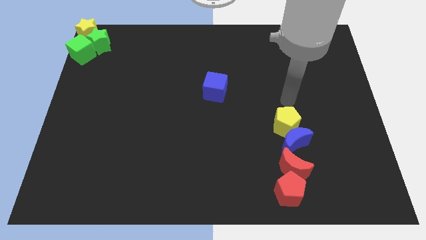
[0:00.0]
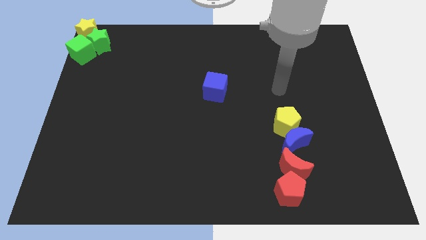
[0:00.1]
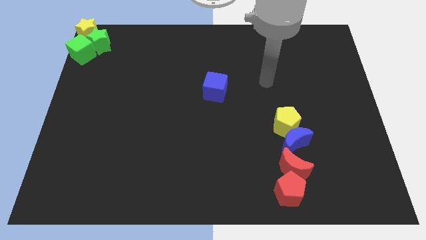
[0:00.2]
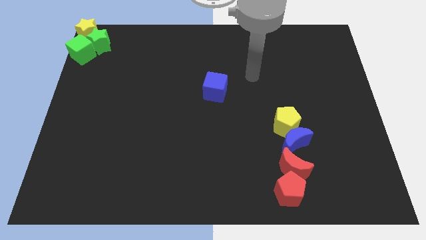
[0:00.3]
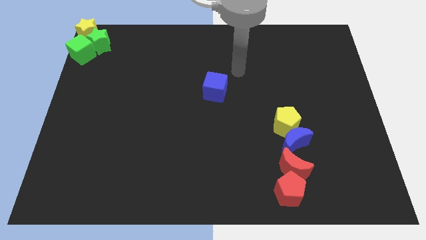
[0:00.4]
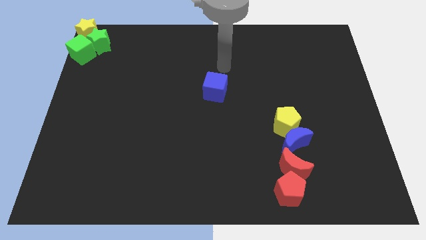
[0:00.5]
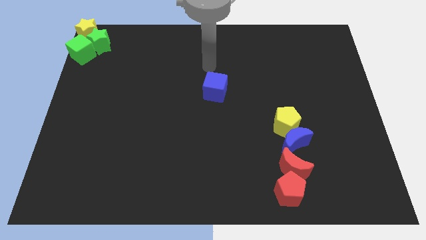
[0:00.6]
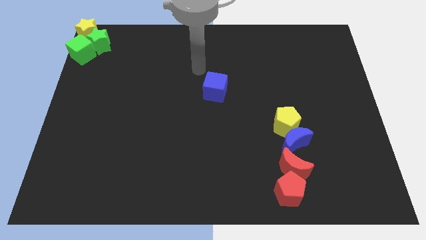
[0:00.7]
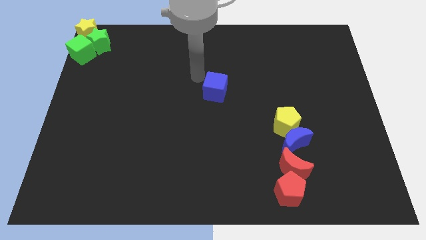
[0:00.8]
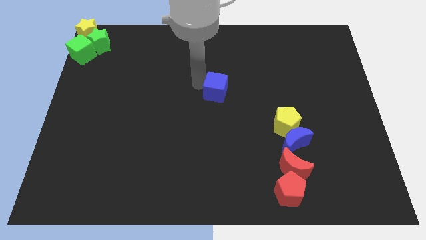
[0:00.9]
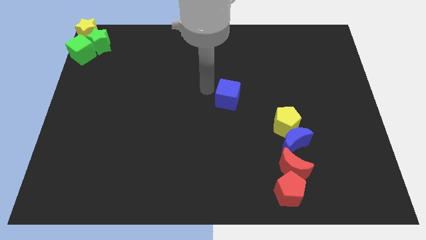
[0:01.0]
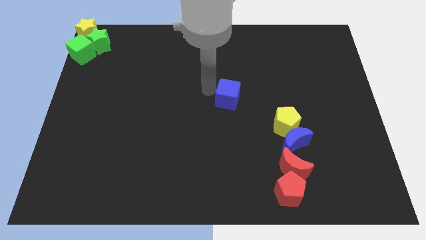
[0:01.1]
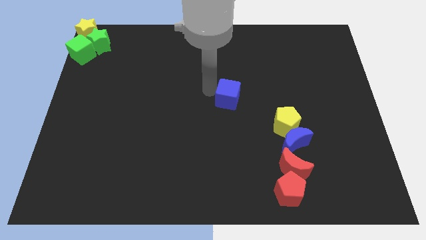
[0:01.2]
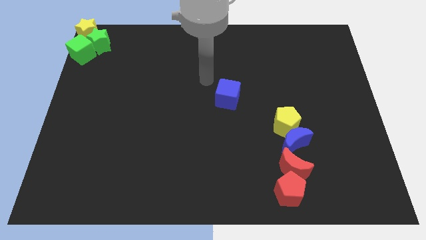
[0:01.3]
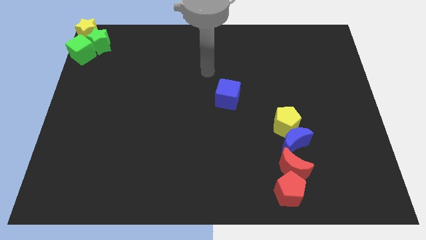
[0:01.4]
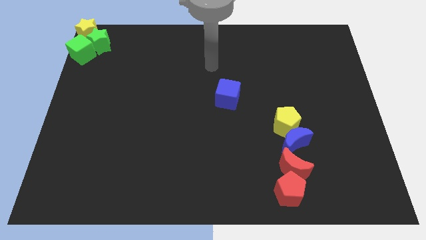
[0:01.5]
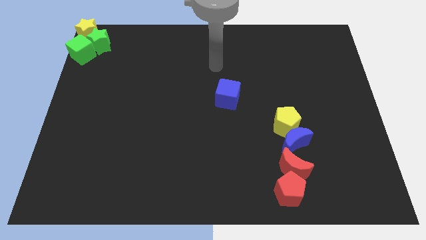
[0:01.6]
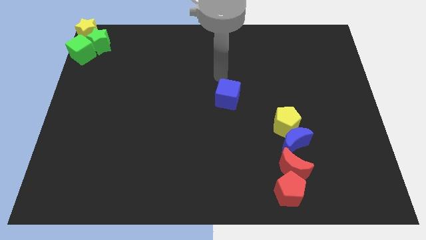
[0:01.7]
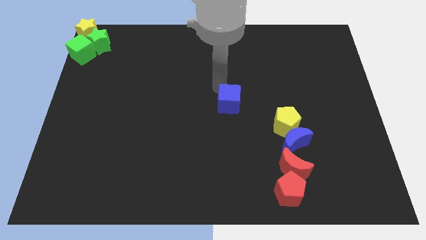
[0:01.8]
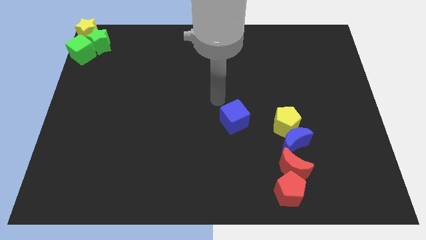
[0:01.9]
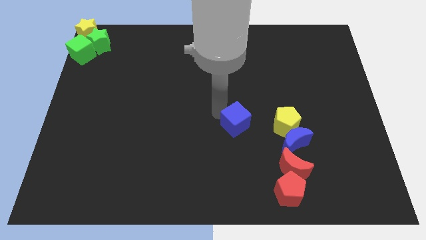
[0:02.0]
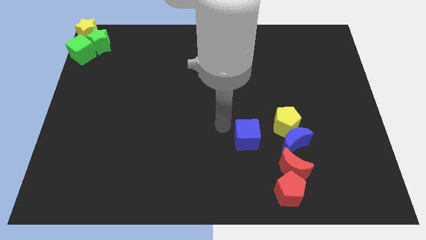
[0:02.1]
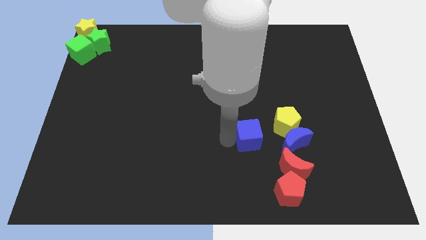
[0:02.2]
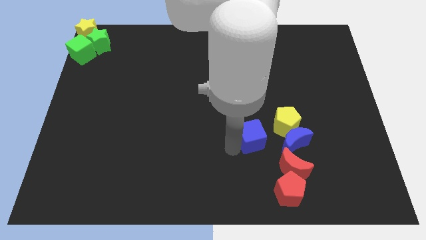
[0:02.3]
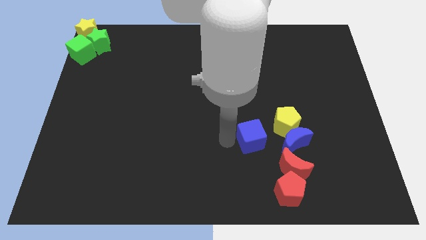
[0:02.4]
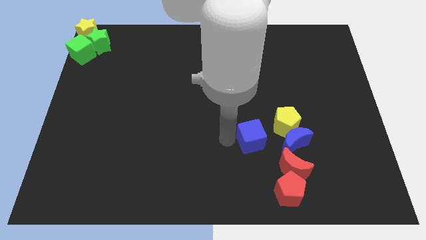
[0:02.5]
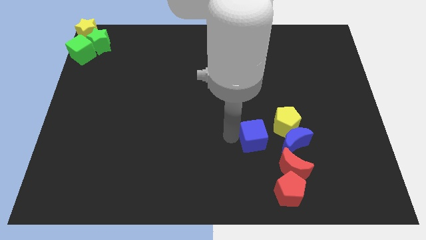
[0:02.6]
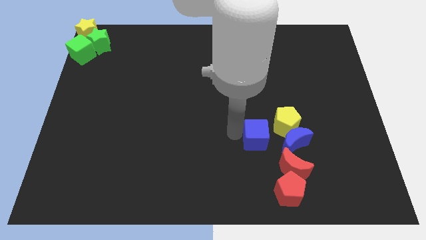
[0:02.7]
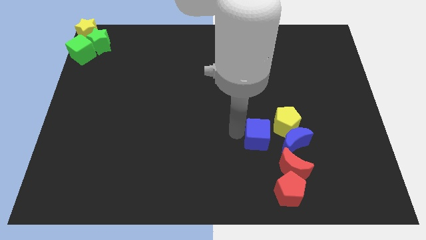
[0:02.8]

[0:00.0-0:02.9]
place the blue cube left to the blue moon

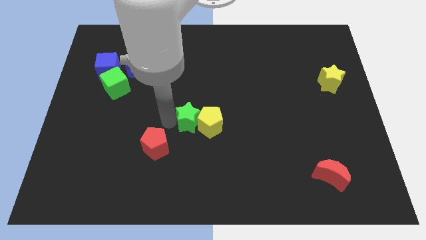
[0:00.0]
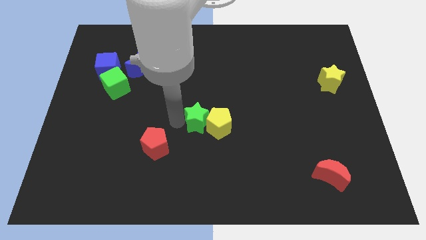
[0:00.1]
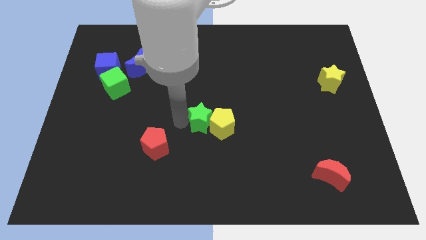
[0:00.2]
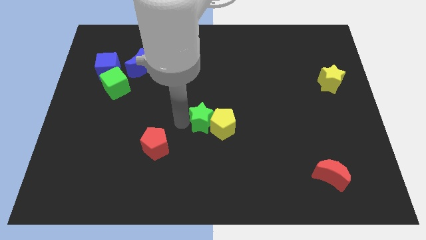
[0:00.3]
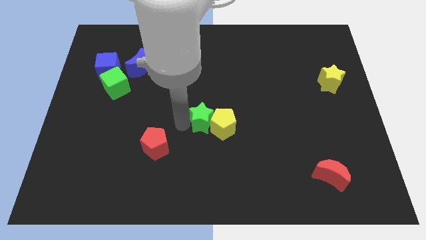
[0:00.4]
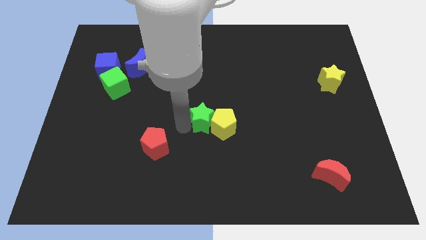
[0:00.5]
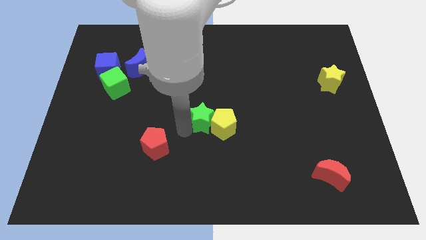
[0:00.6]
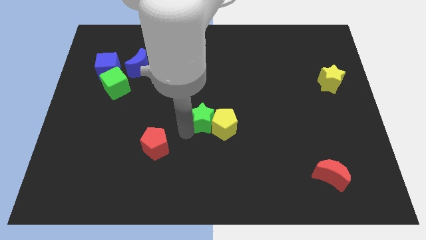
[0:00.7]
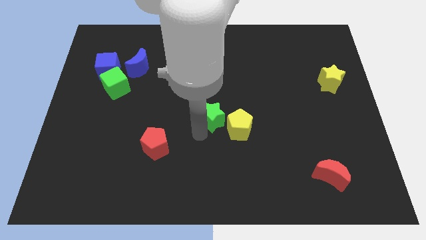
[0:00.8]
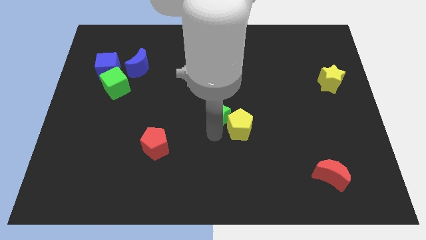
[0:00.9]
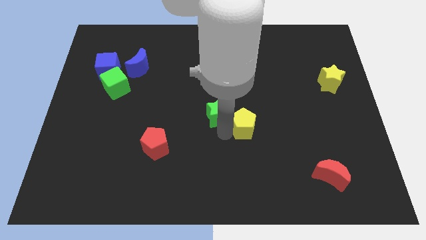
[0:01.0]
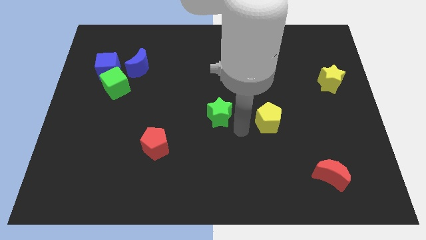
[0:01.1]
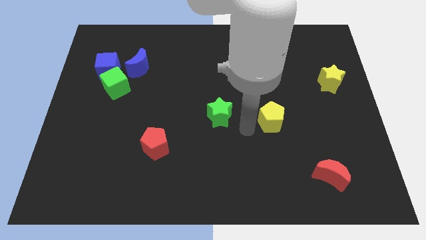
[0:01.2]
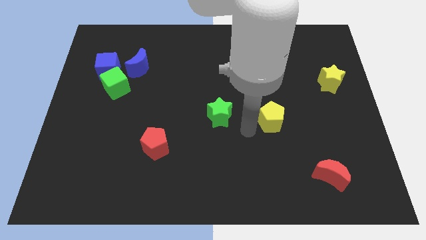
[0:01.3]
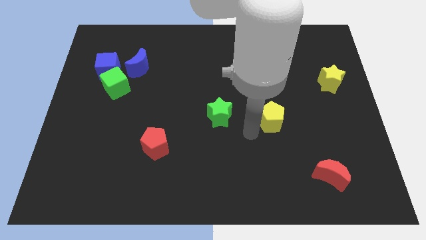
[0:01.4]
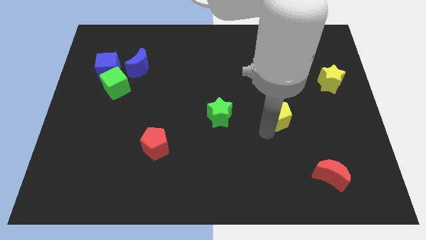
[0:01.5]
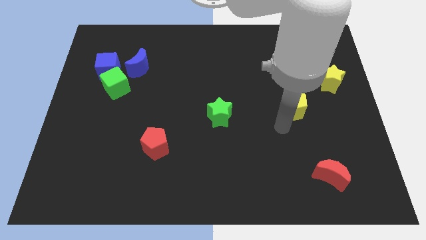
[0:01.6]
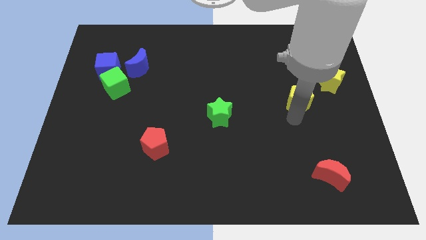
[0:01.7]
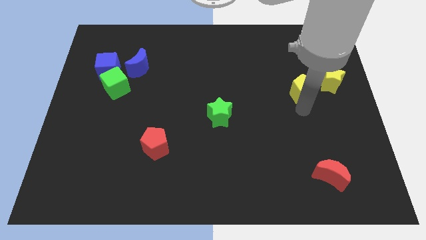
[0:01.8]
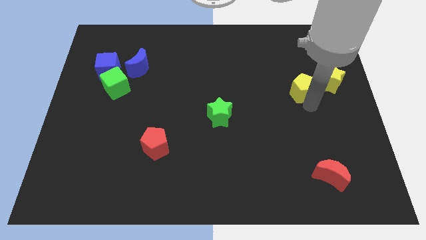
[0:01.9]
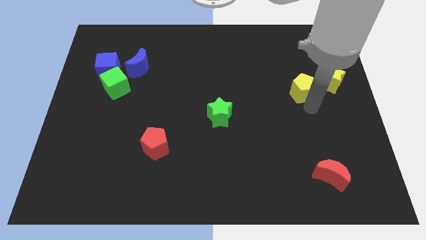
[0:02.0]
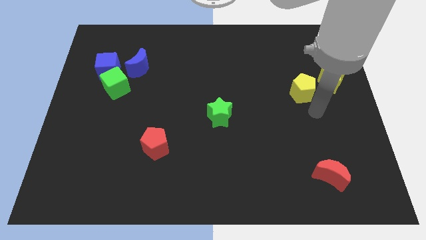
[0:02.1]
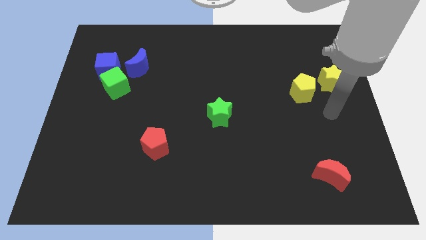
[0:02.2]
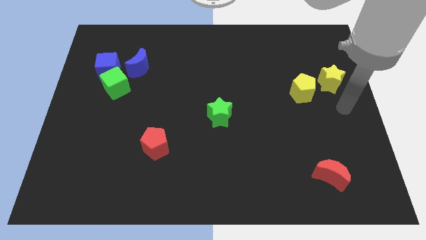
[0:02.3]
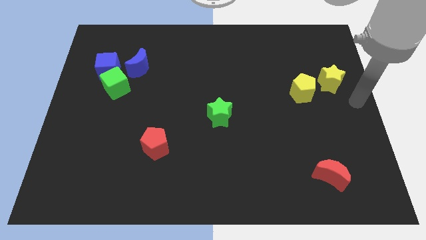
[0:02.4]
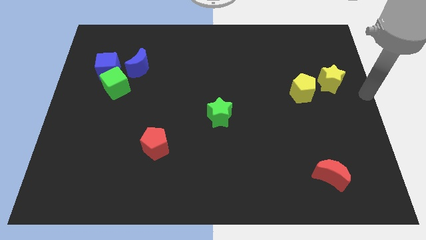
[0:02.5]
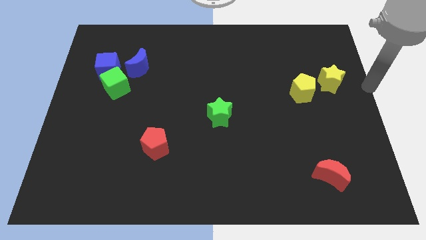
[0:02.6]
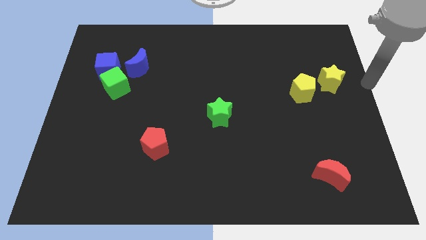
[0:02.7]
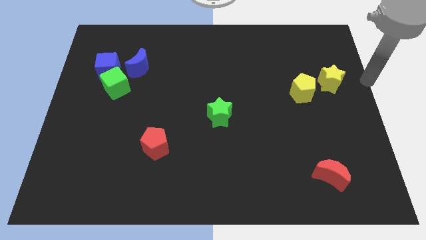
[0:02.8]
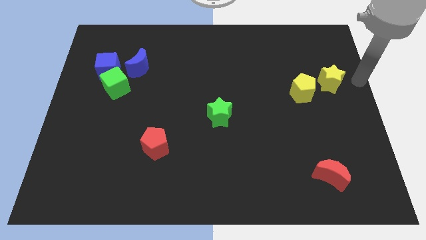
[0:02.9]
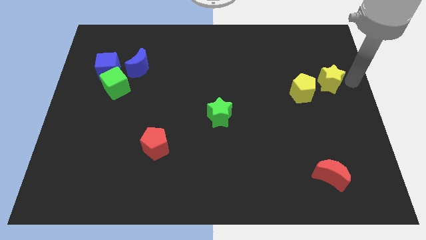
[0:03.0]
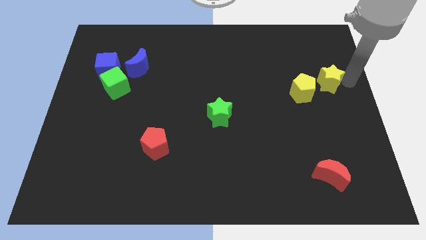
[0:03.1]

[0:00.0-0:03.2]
separate the green star and yellow pentagon

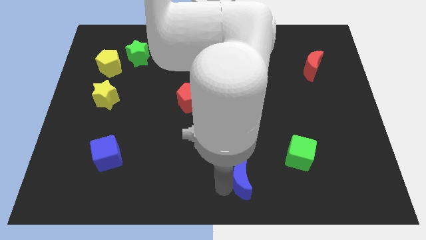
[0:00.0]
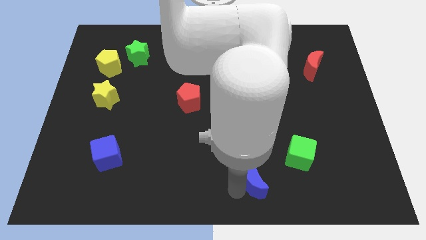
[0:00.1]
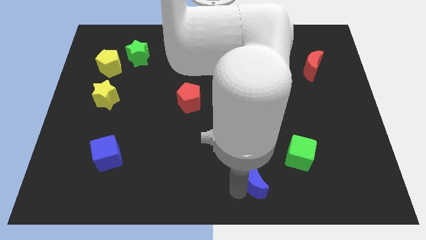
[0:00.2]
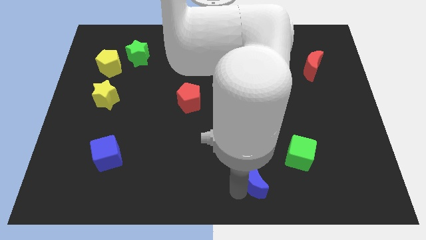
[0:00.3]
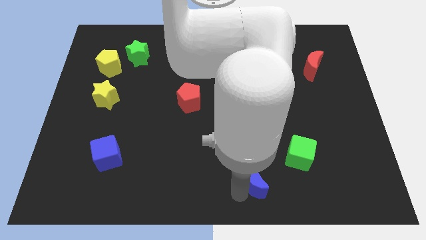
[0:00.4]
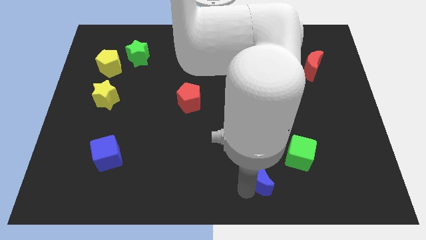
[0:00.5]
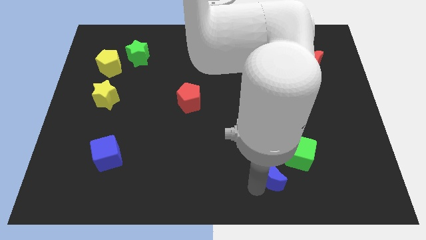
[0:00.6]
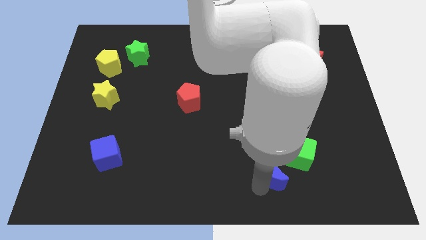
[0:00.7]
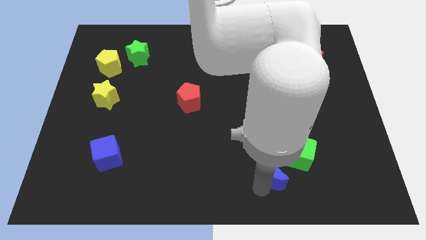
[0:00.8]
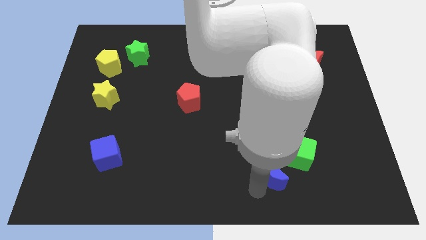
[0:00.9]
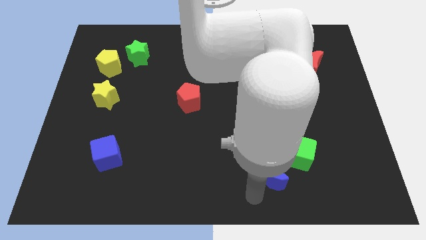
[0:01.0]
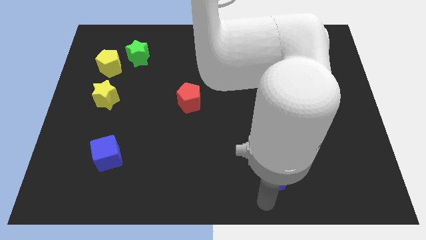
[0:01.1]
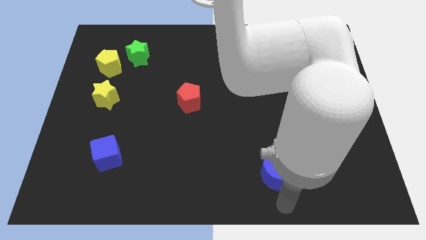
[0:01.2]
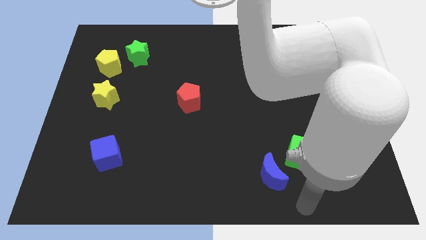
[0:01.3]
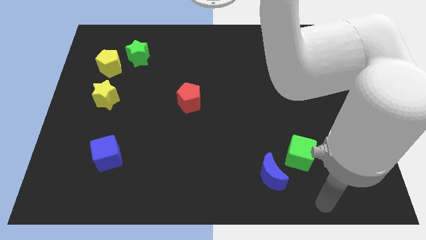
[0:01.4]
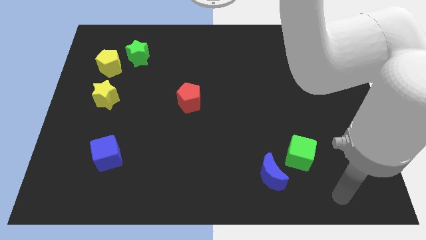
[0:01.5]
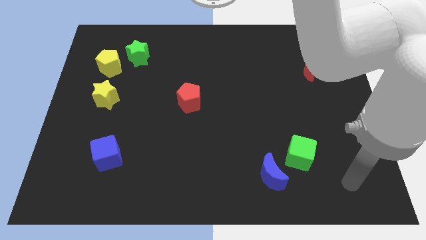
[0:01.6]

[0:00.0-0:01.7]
move the blue moon diagonally bottom left to the green cube

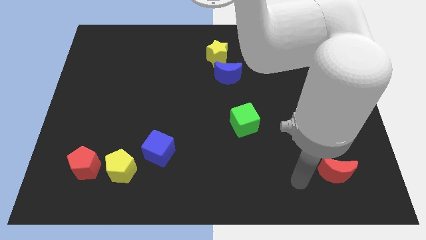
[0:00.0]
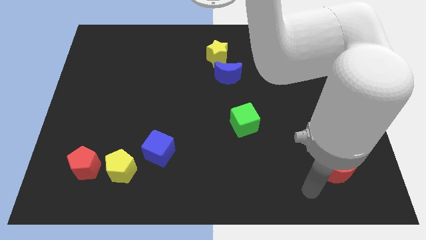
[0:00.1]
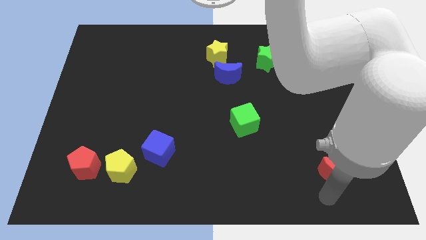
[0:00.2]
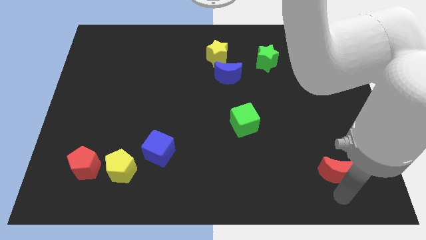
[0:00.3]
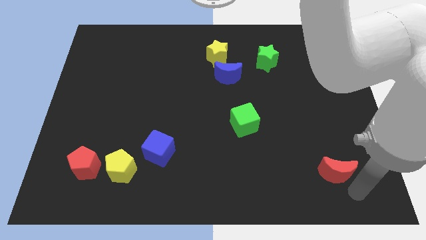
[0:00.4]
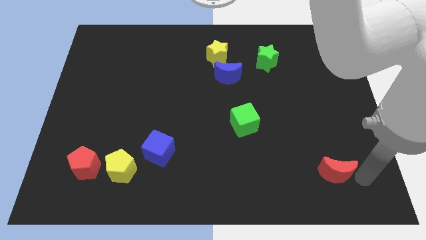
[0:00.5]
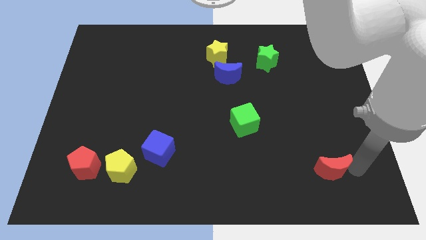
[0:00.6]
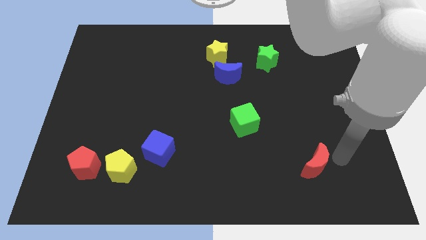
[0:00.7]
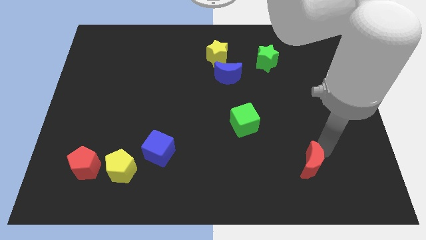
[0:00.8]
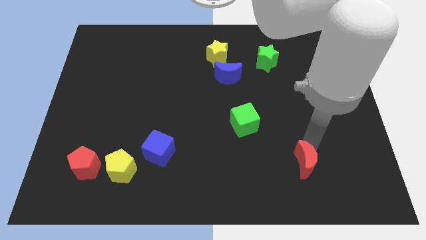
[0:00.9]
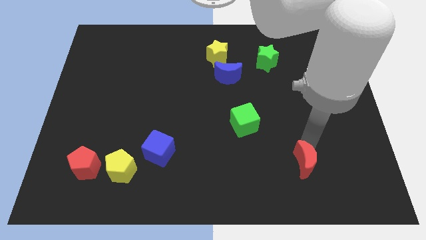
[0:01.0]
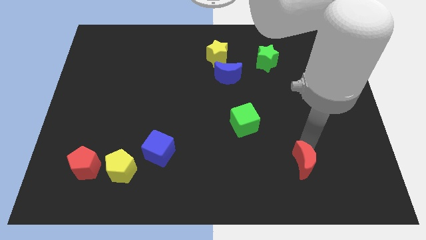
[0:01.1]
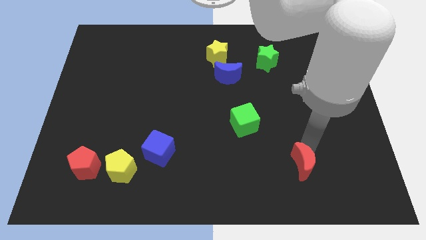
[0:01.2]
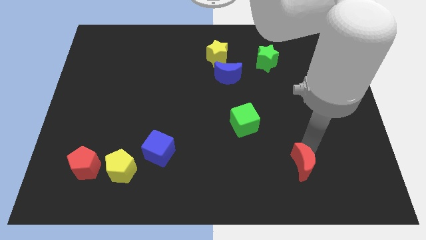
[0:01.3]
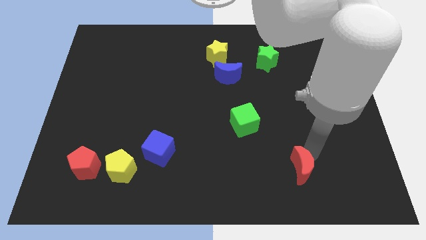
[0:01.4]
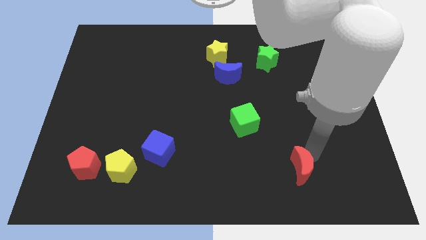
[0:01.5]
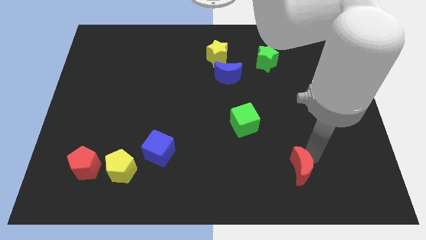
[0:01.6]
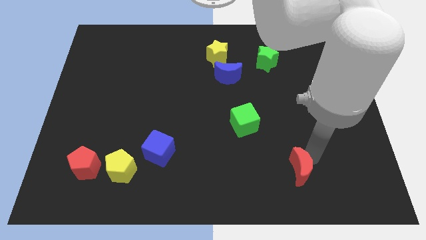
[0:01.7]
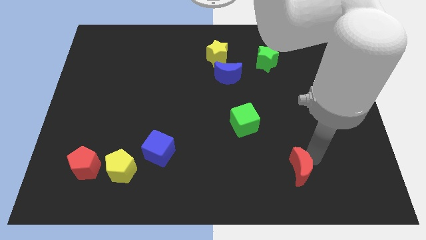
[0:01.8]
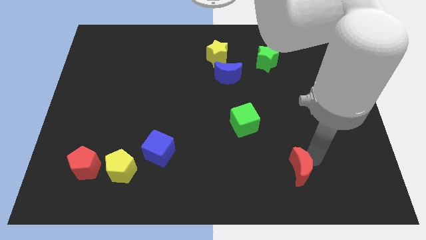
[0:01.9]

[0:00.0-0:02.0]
place the red moon diagonally bottom right to the green cube
